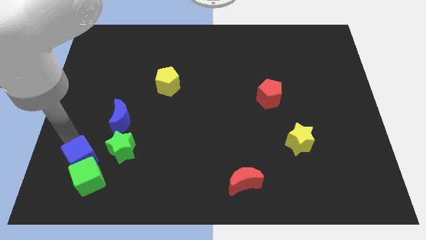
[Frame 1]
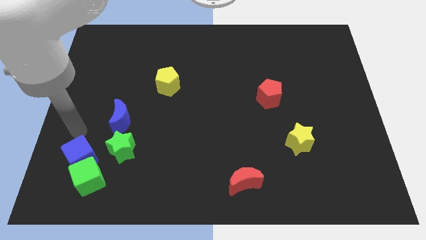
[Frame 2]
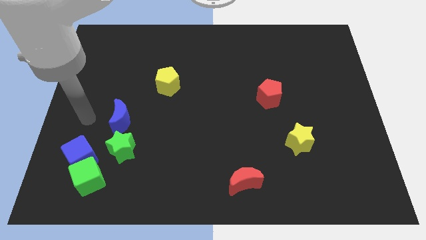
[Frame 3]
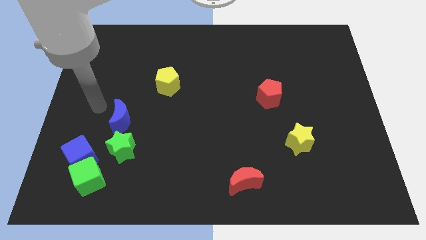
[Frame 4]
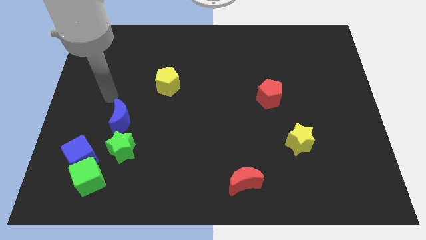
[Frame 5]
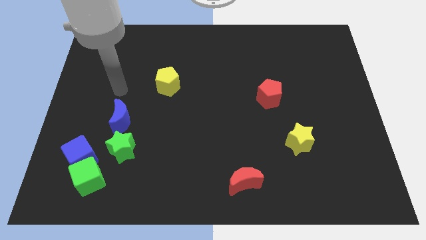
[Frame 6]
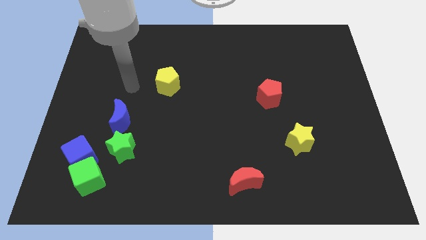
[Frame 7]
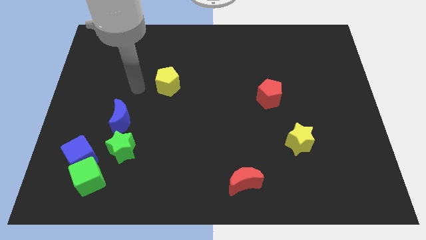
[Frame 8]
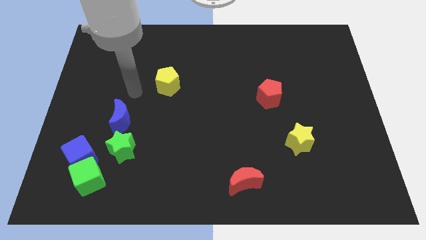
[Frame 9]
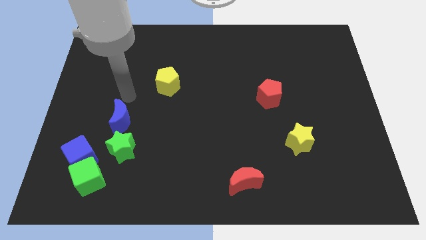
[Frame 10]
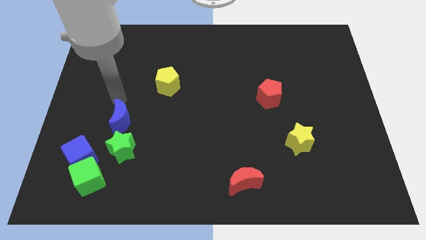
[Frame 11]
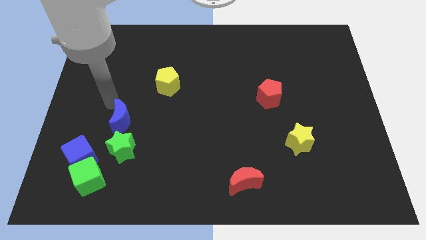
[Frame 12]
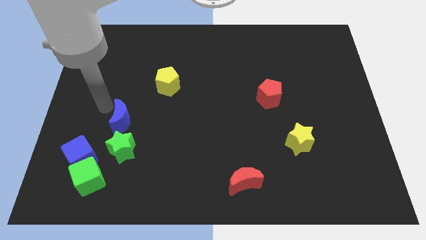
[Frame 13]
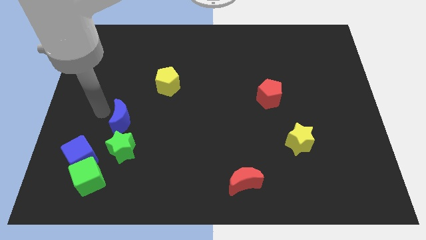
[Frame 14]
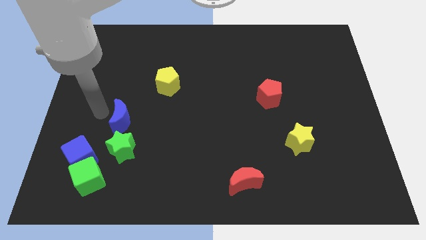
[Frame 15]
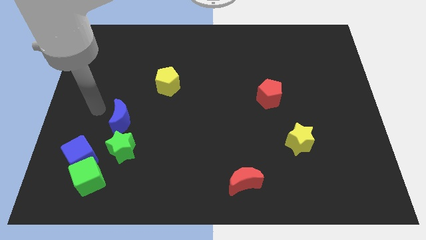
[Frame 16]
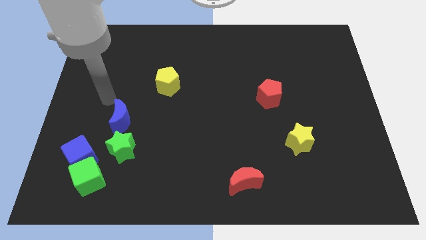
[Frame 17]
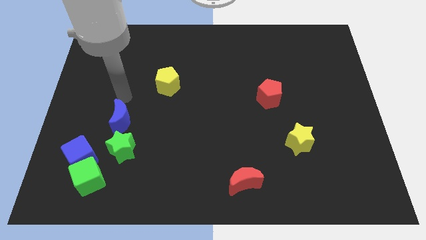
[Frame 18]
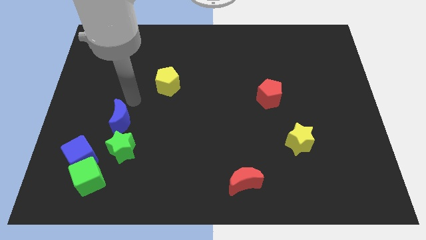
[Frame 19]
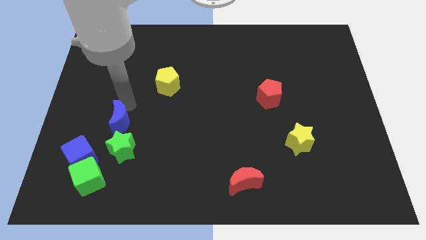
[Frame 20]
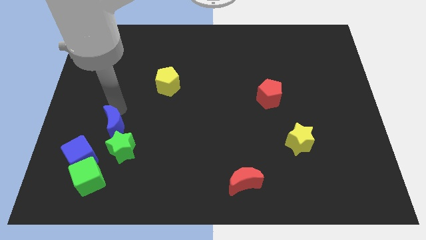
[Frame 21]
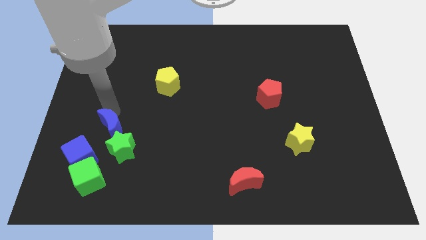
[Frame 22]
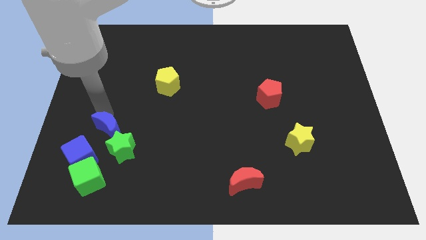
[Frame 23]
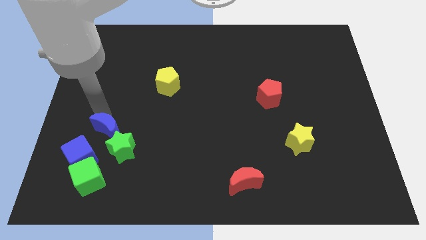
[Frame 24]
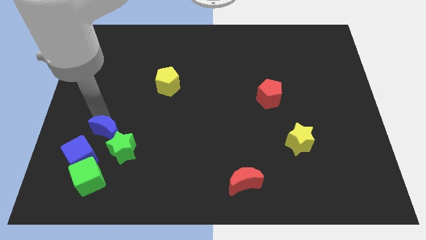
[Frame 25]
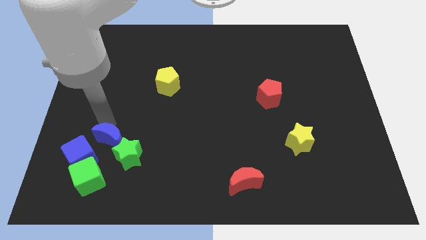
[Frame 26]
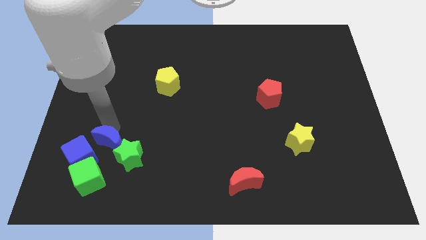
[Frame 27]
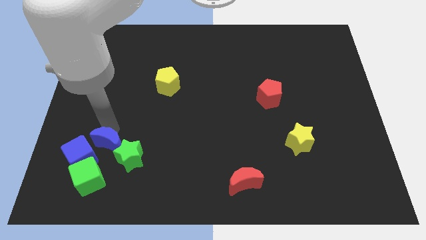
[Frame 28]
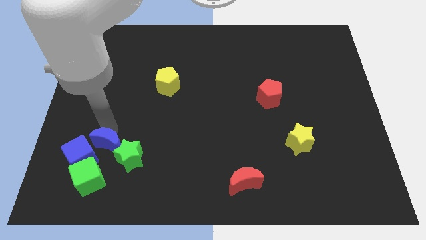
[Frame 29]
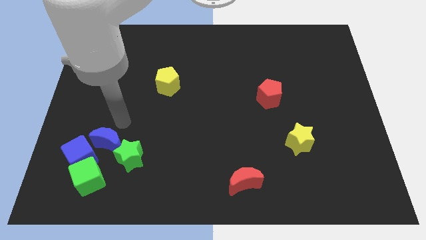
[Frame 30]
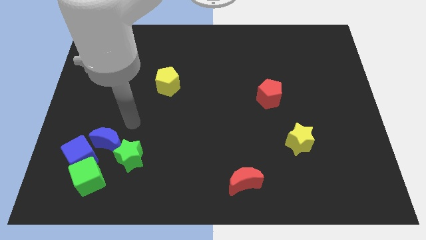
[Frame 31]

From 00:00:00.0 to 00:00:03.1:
move the blue crescent to the right side of the blue cube

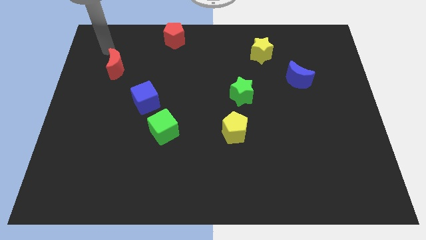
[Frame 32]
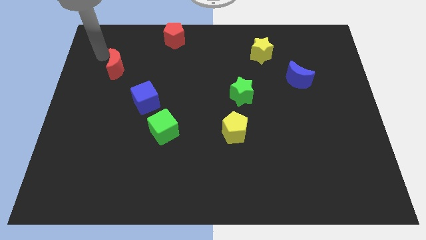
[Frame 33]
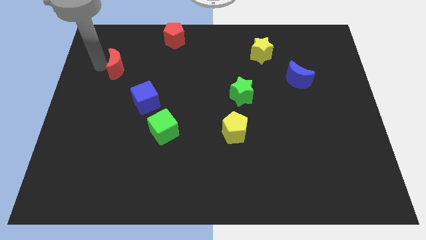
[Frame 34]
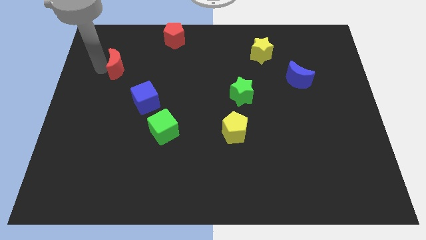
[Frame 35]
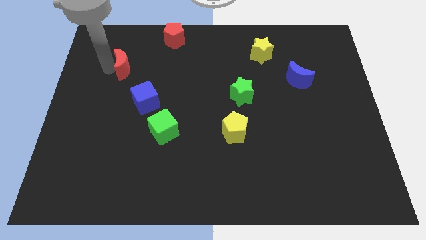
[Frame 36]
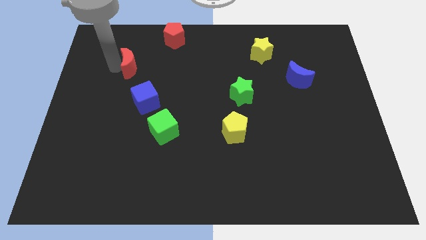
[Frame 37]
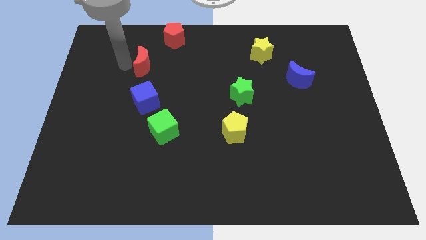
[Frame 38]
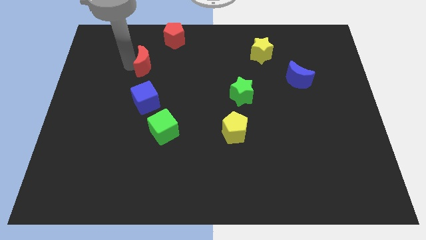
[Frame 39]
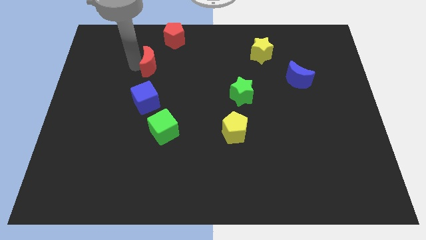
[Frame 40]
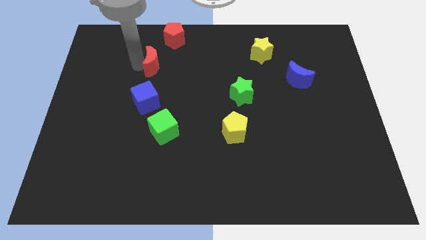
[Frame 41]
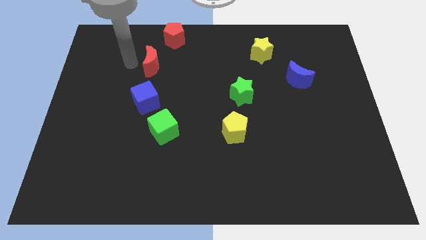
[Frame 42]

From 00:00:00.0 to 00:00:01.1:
slide red moon on top of blue cube

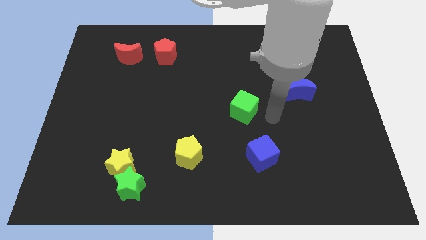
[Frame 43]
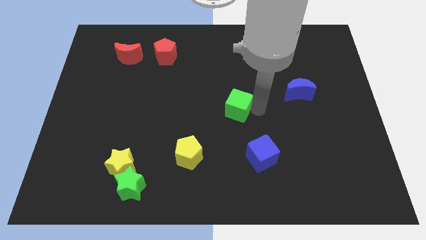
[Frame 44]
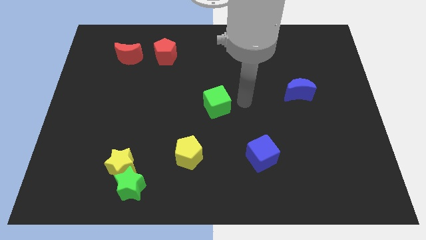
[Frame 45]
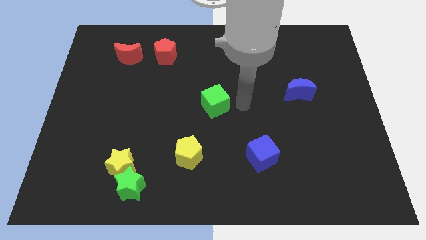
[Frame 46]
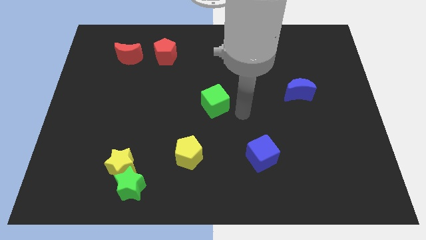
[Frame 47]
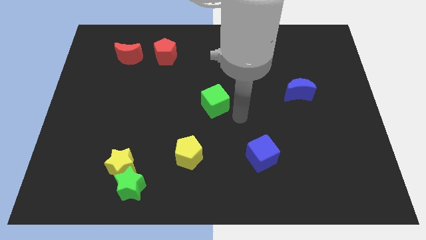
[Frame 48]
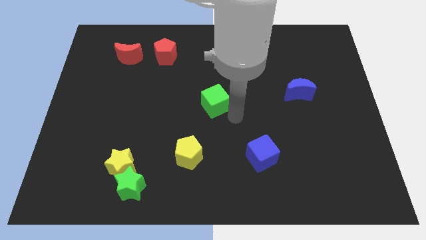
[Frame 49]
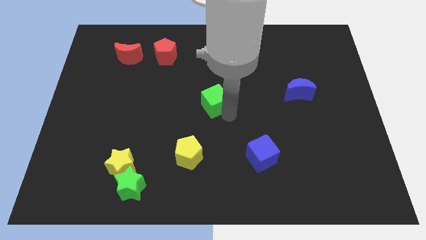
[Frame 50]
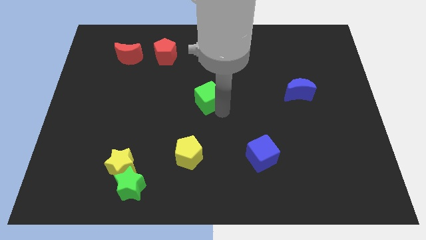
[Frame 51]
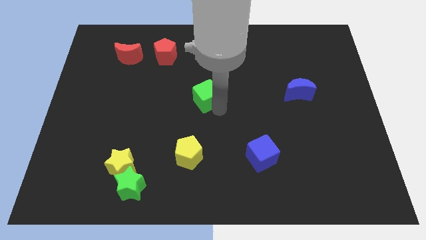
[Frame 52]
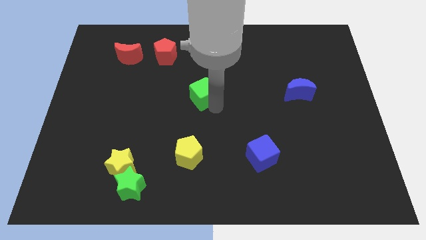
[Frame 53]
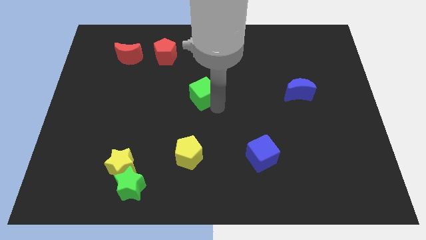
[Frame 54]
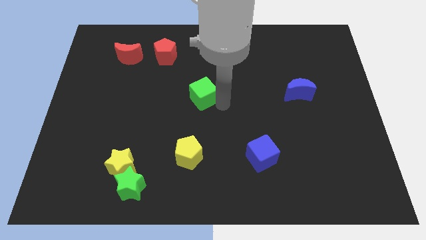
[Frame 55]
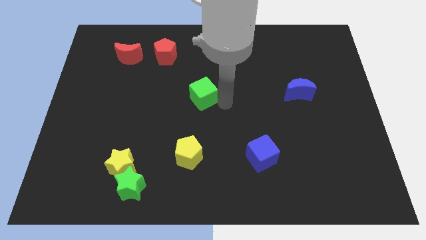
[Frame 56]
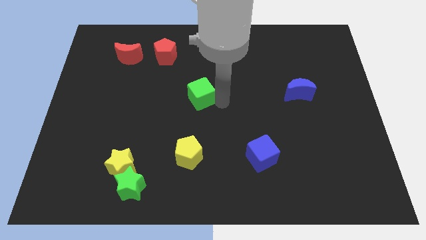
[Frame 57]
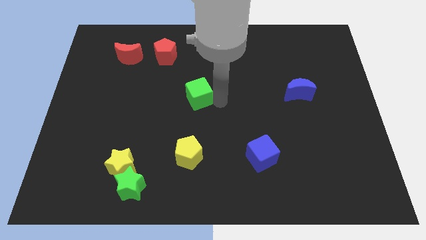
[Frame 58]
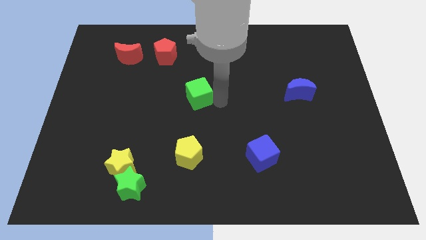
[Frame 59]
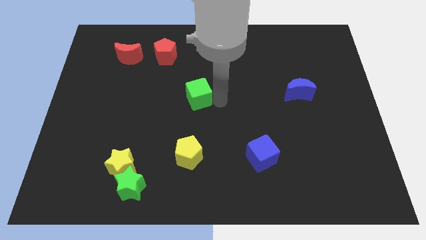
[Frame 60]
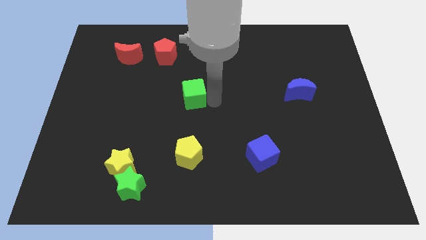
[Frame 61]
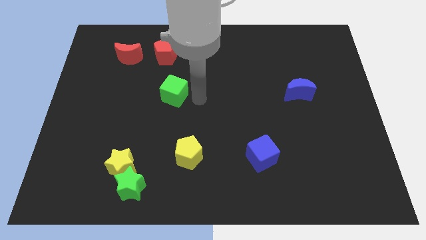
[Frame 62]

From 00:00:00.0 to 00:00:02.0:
put the green cube vertically above the yellow pentagon

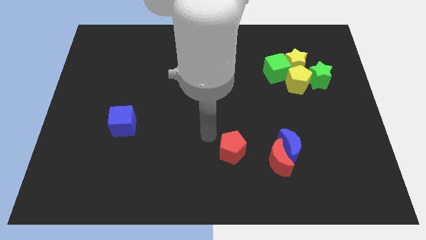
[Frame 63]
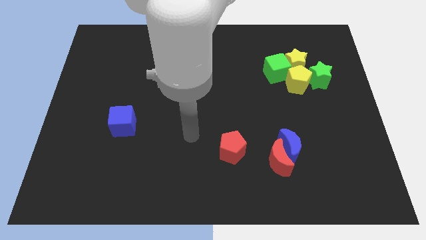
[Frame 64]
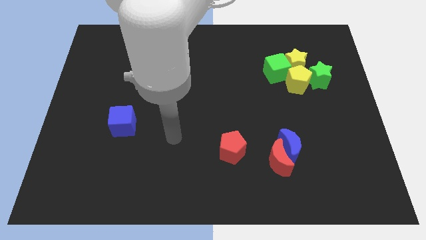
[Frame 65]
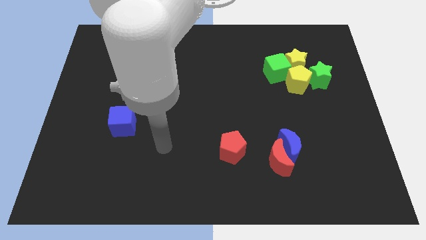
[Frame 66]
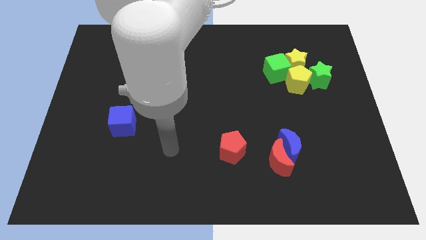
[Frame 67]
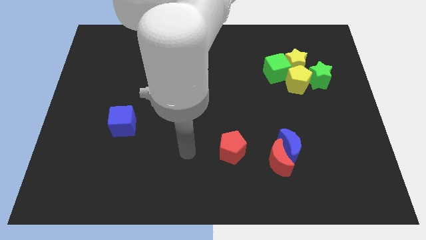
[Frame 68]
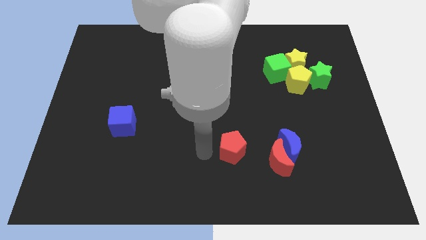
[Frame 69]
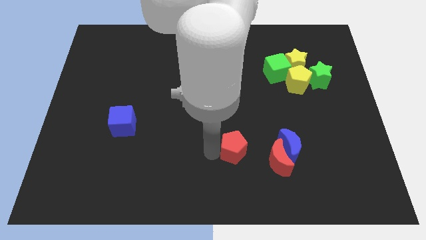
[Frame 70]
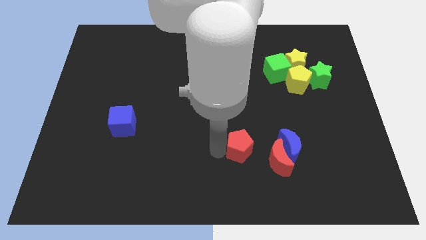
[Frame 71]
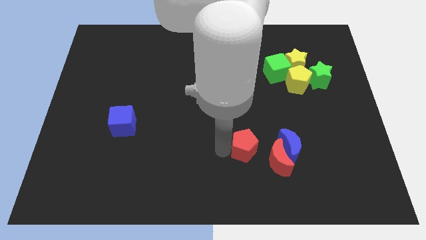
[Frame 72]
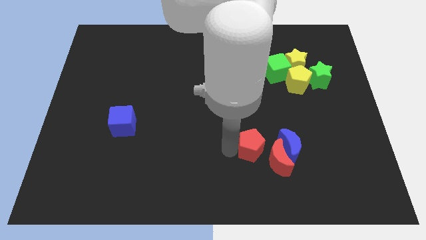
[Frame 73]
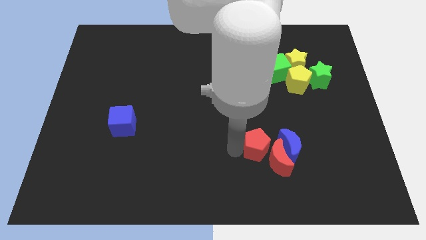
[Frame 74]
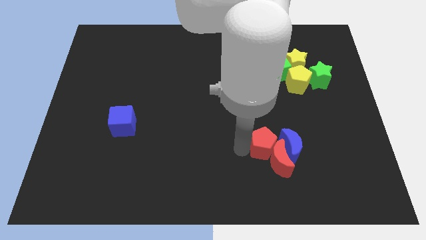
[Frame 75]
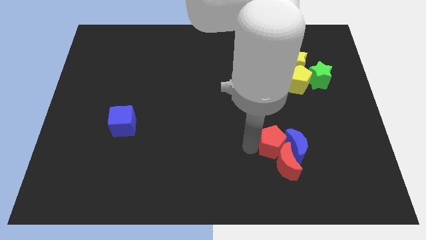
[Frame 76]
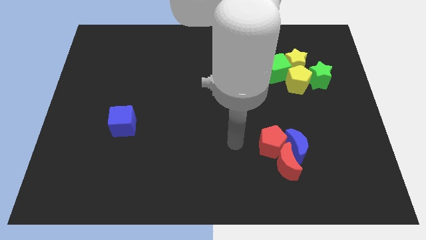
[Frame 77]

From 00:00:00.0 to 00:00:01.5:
push the red pentagon into the red moon and blue crescent

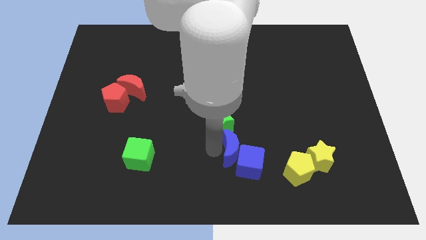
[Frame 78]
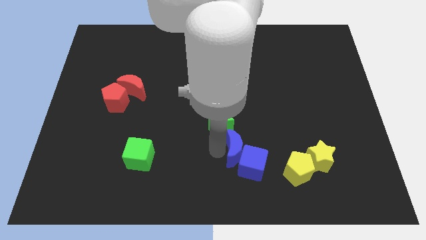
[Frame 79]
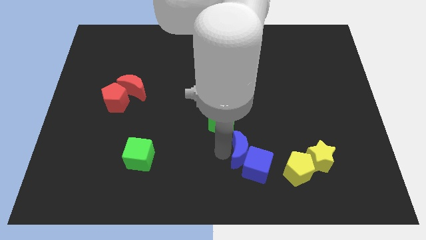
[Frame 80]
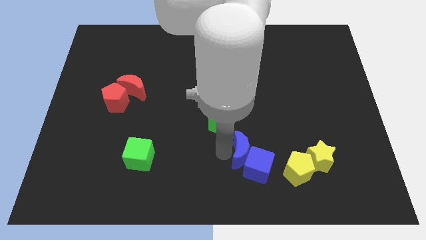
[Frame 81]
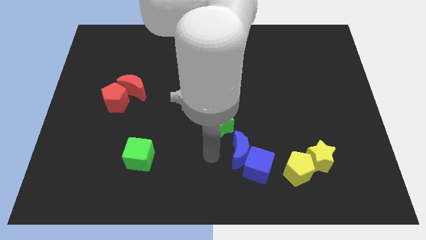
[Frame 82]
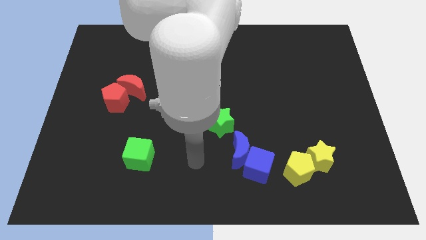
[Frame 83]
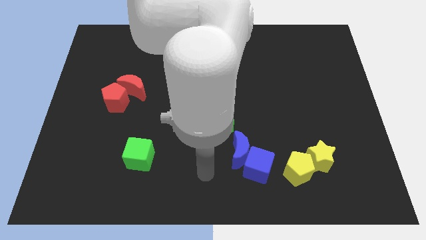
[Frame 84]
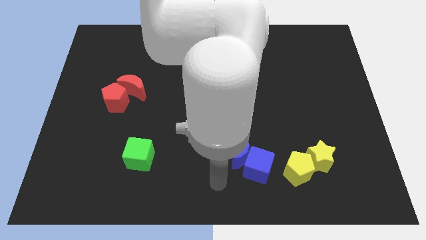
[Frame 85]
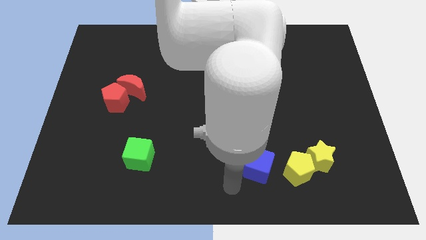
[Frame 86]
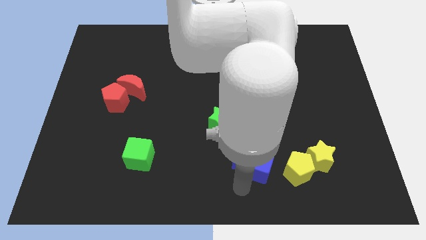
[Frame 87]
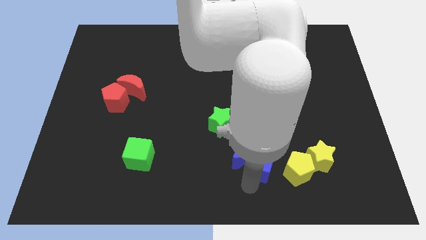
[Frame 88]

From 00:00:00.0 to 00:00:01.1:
touch the bottom side of the blue cube
